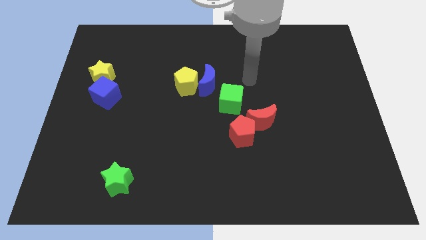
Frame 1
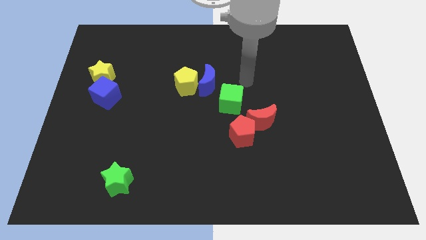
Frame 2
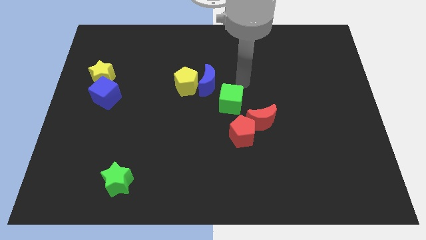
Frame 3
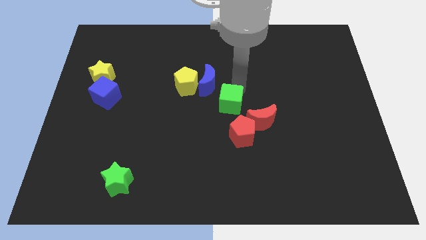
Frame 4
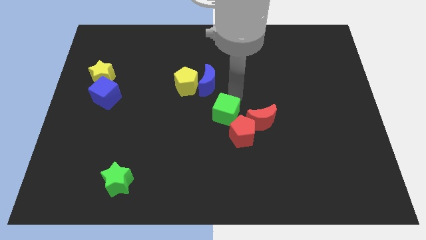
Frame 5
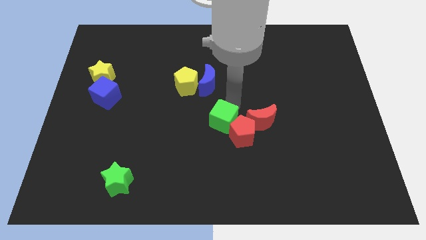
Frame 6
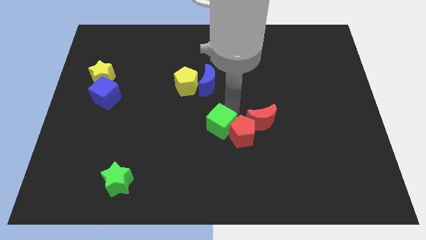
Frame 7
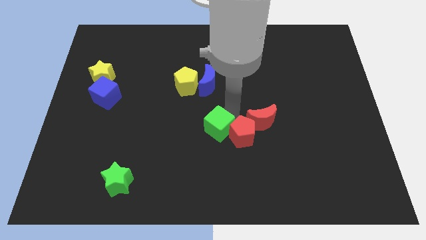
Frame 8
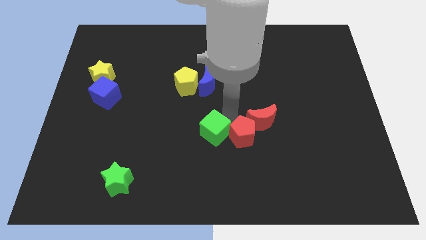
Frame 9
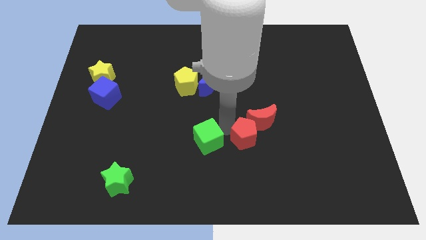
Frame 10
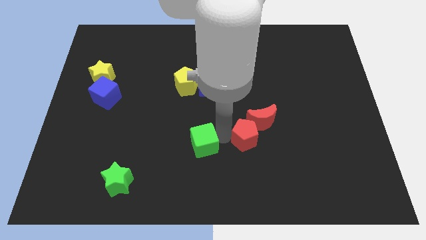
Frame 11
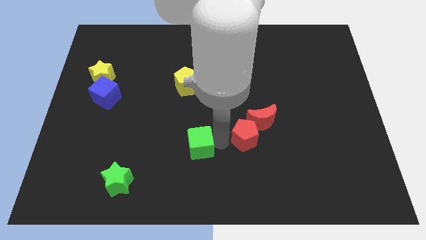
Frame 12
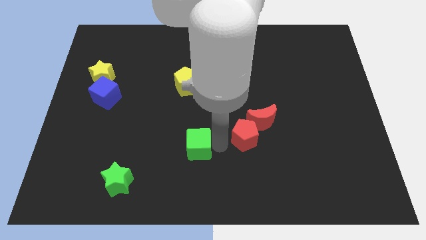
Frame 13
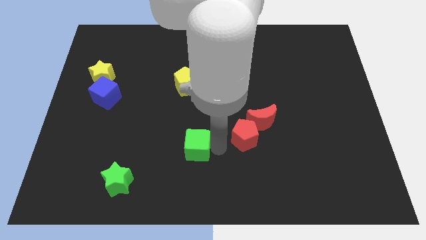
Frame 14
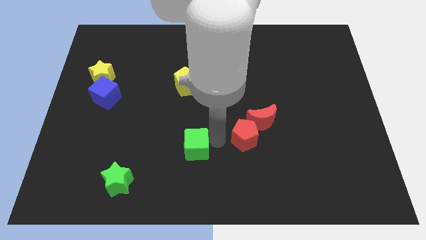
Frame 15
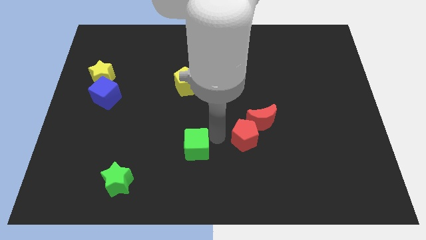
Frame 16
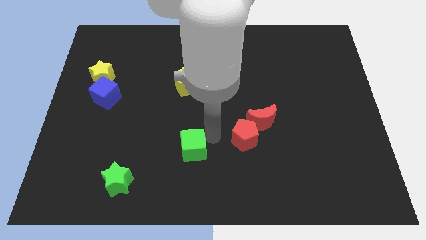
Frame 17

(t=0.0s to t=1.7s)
drag the green cube slightly down

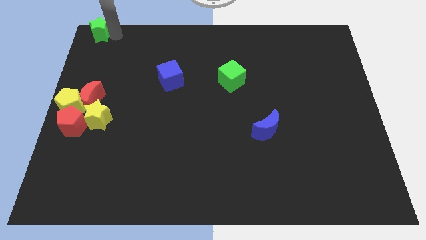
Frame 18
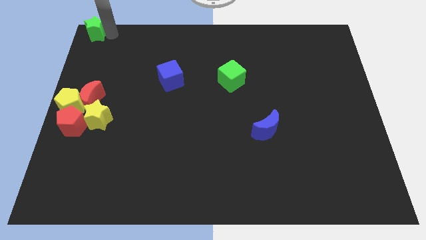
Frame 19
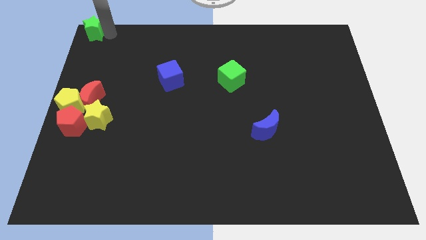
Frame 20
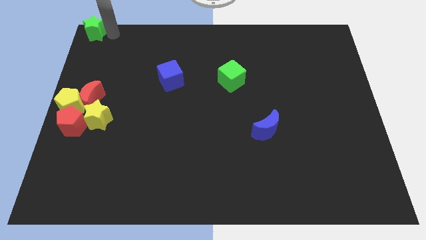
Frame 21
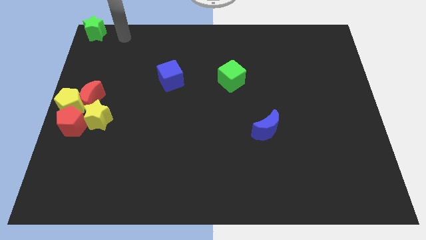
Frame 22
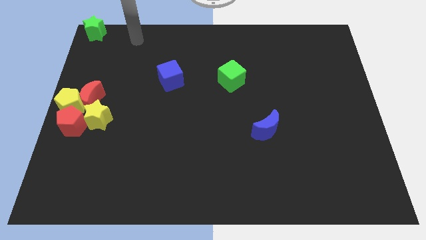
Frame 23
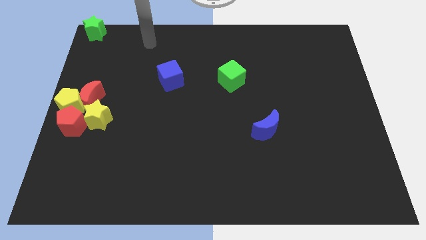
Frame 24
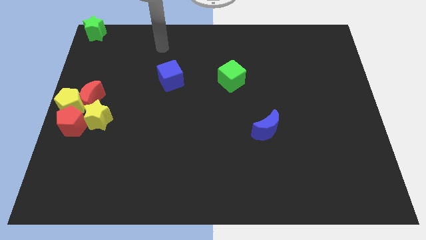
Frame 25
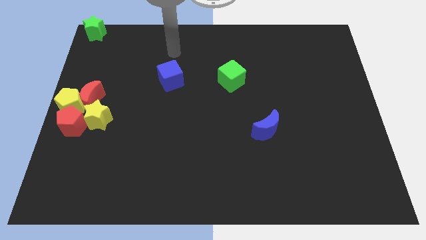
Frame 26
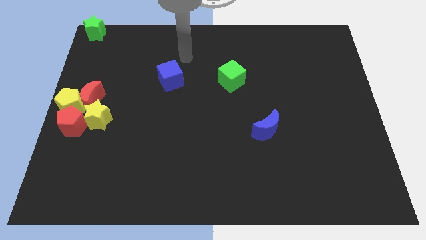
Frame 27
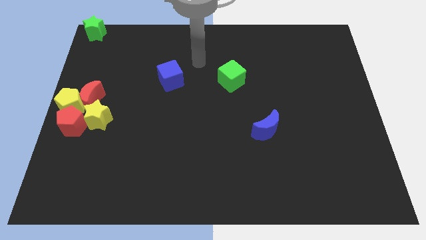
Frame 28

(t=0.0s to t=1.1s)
move the arm away from the green star

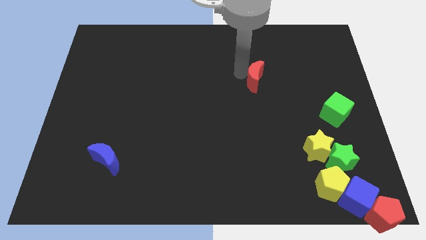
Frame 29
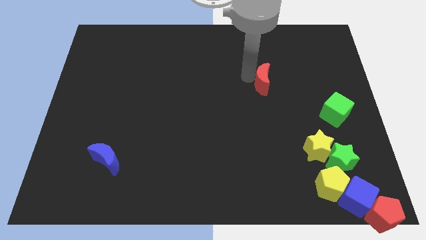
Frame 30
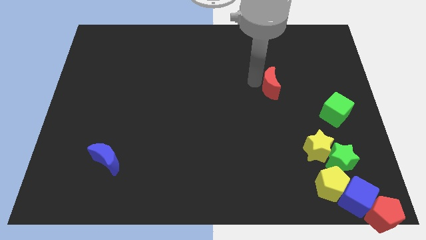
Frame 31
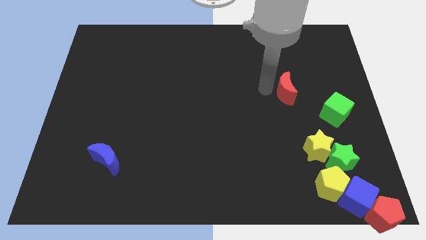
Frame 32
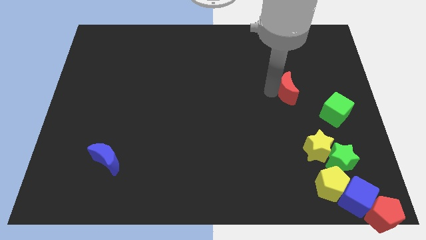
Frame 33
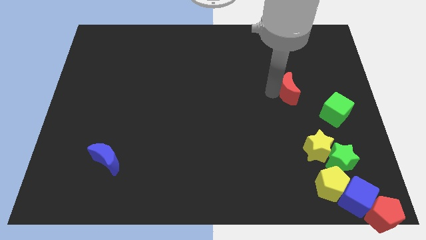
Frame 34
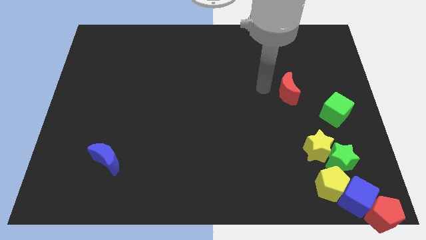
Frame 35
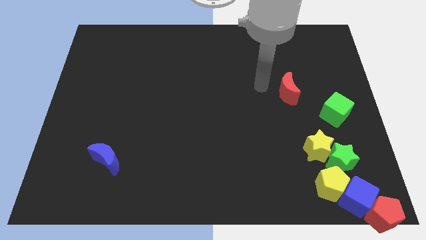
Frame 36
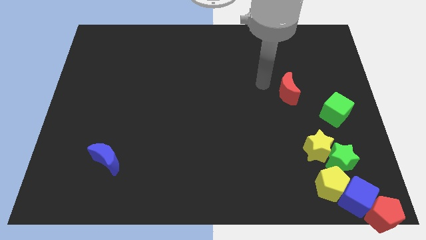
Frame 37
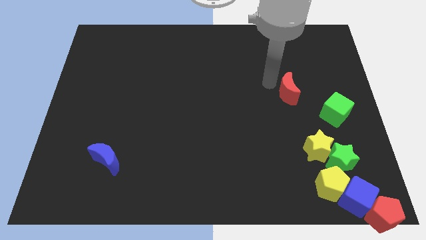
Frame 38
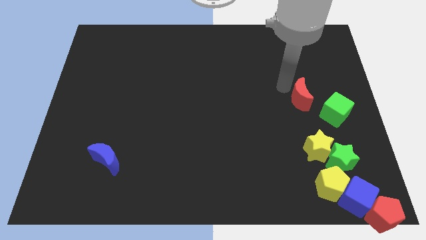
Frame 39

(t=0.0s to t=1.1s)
move the red crescent towards the green cube

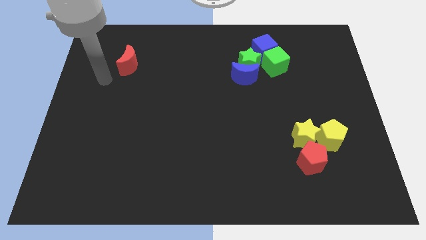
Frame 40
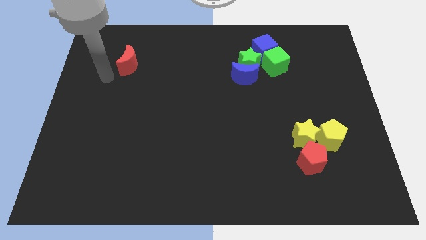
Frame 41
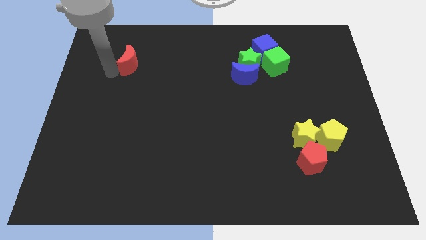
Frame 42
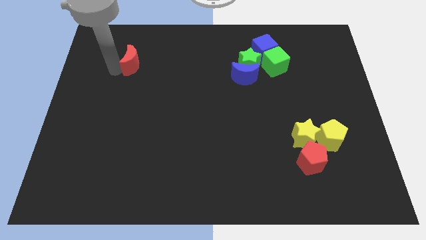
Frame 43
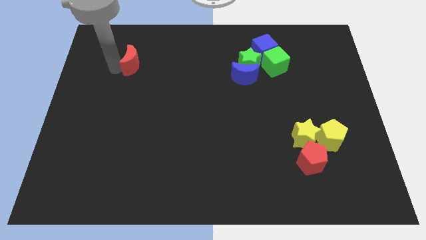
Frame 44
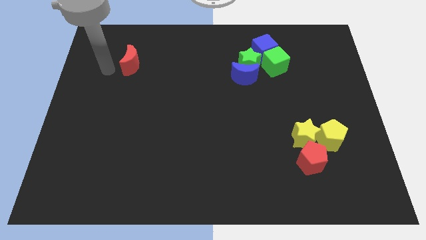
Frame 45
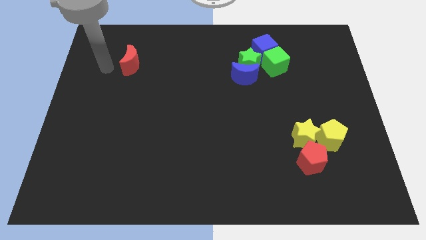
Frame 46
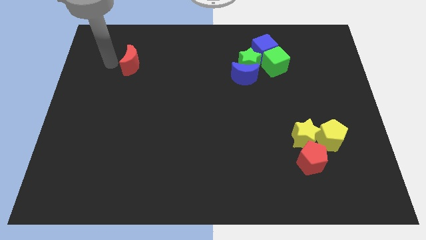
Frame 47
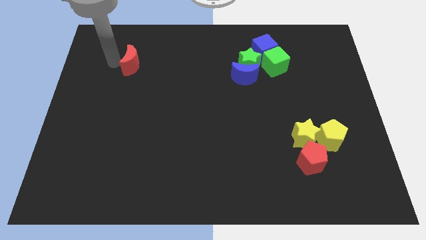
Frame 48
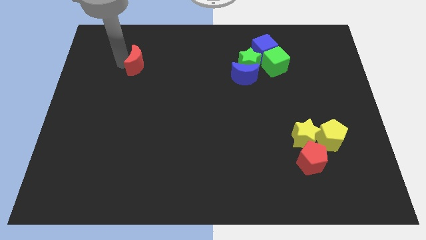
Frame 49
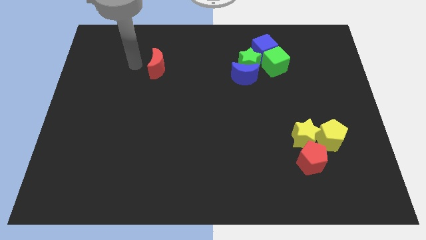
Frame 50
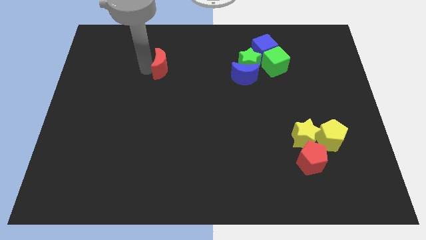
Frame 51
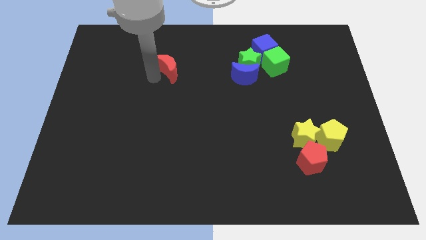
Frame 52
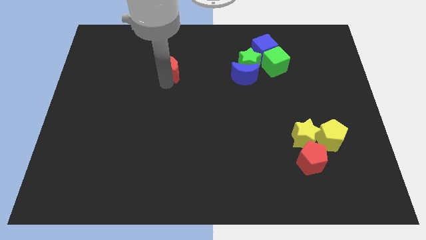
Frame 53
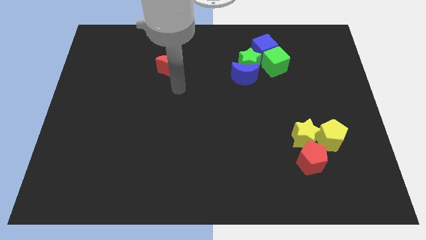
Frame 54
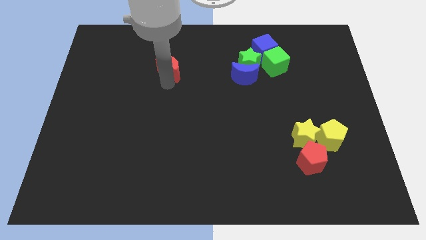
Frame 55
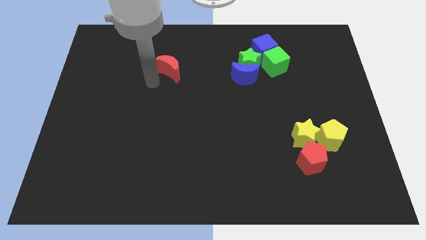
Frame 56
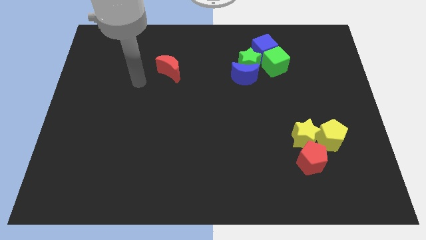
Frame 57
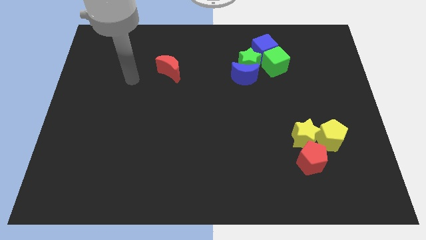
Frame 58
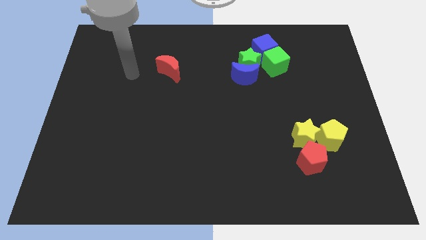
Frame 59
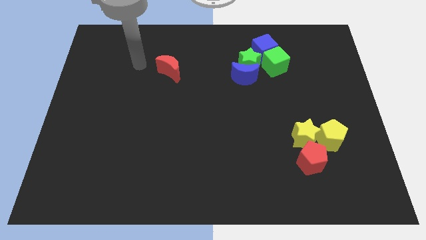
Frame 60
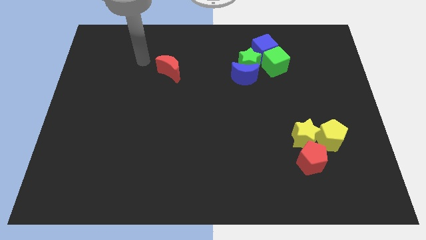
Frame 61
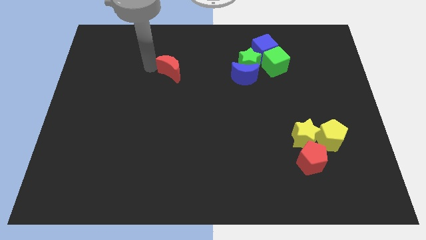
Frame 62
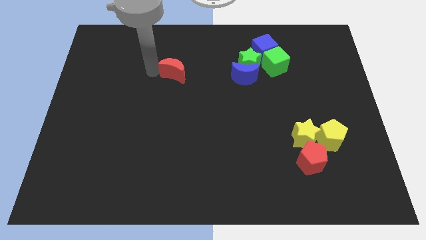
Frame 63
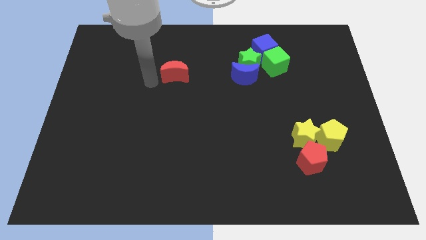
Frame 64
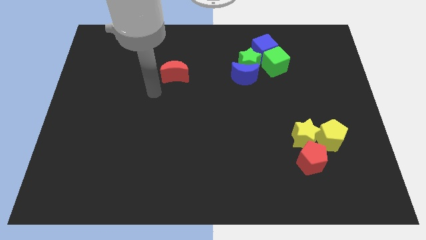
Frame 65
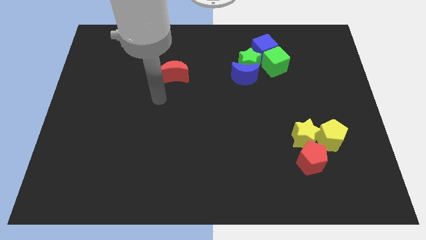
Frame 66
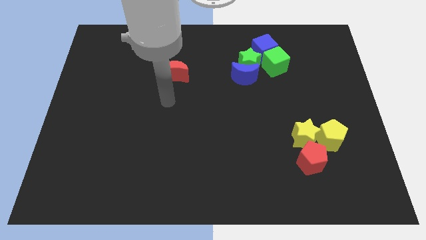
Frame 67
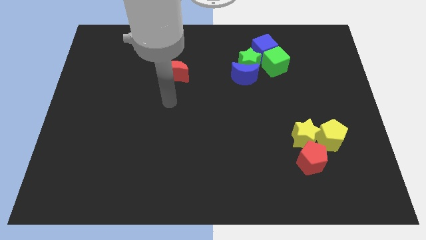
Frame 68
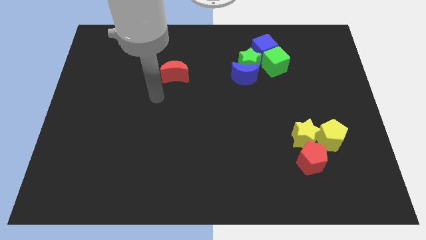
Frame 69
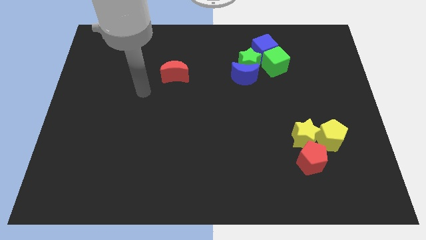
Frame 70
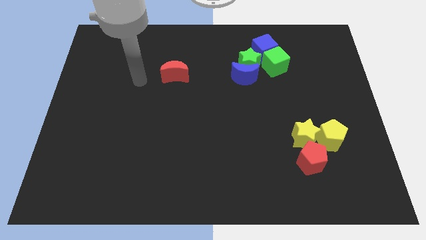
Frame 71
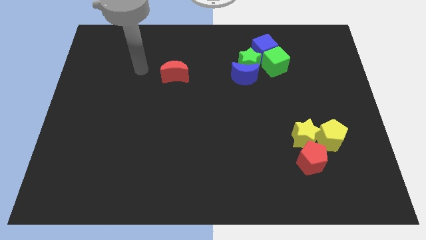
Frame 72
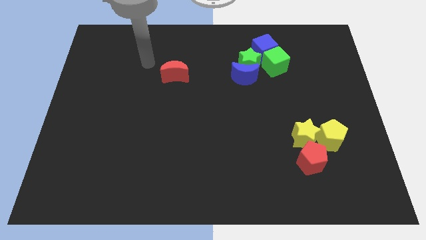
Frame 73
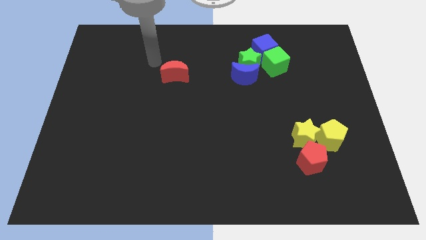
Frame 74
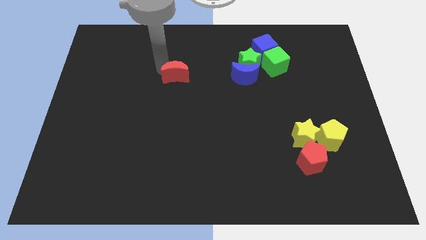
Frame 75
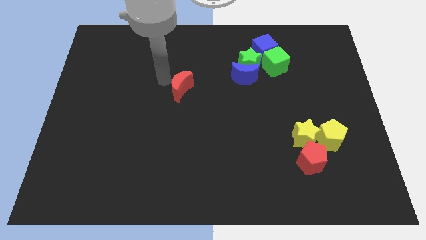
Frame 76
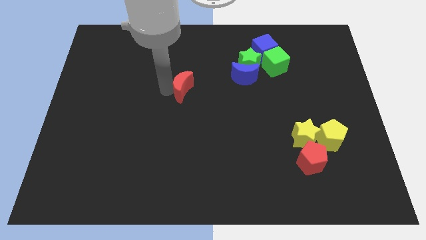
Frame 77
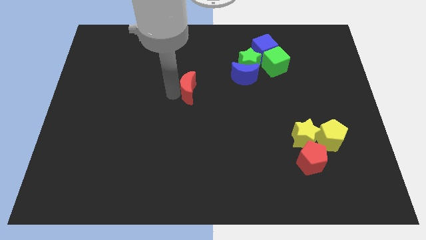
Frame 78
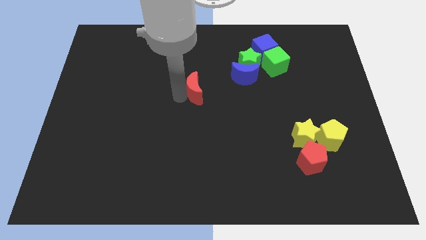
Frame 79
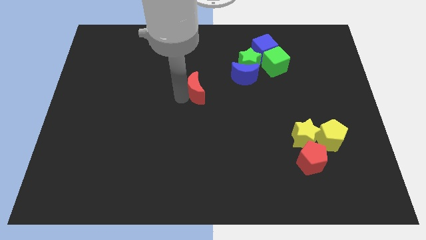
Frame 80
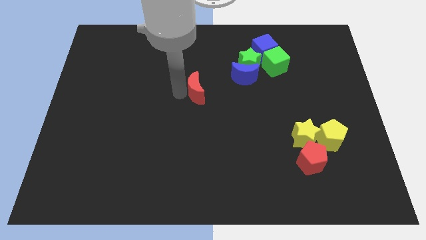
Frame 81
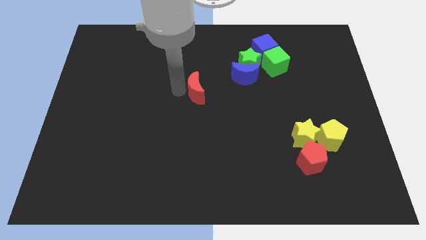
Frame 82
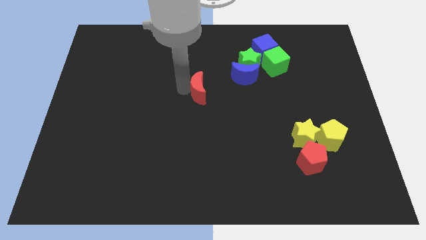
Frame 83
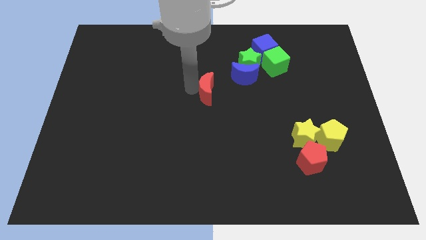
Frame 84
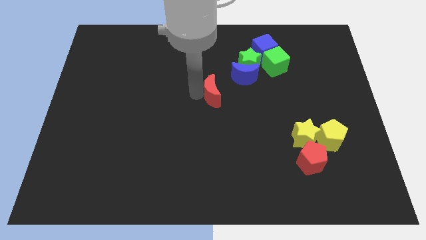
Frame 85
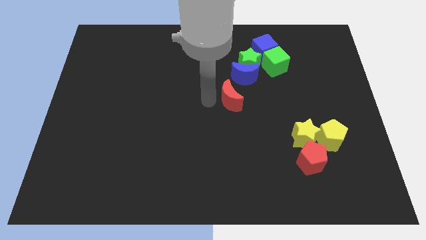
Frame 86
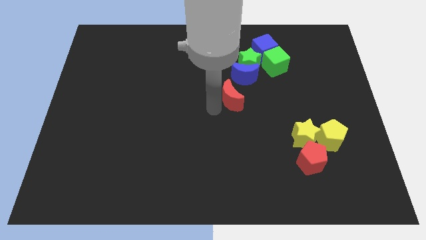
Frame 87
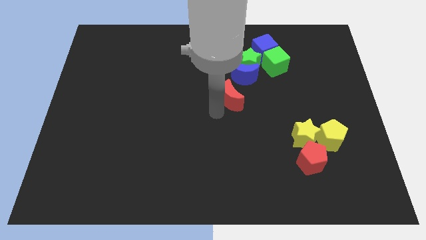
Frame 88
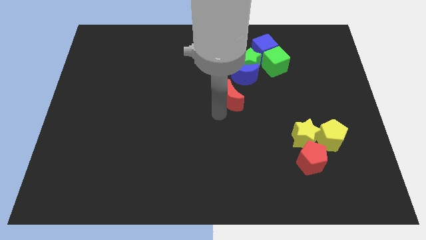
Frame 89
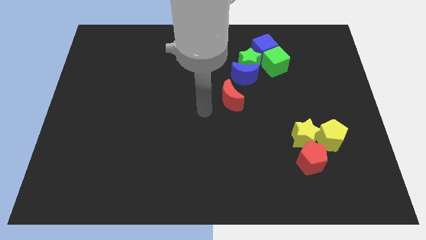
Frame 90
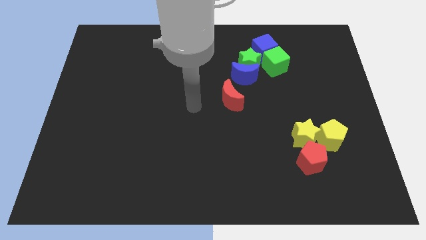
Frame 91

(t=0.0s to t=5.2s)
place the red crescent to the bottom left of the blue crescent
